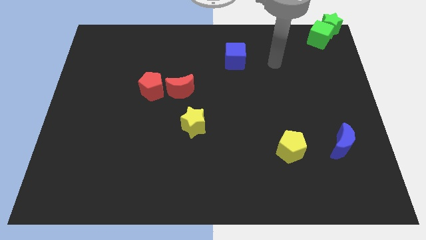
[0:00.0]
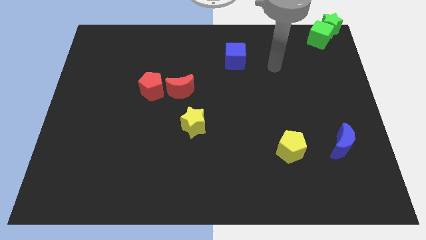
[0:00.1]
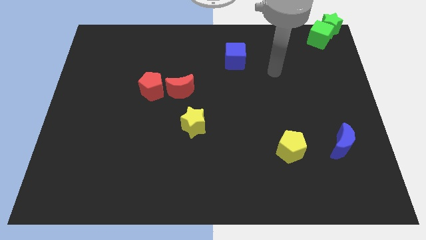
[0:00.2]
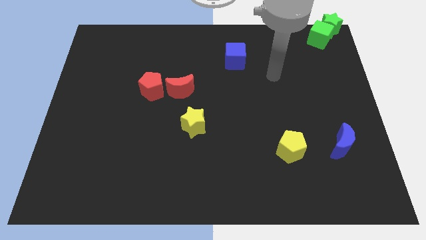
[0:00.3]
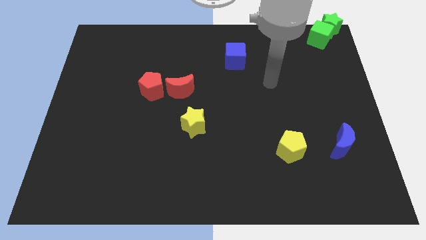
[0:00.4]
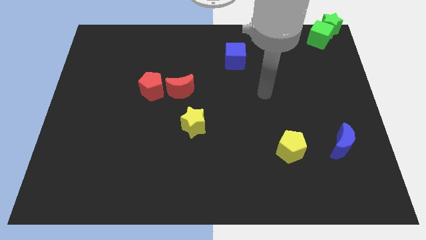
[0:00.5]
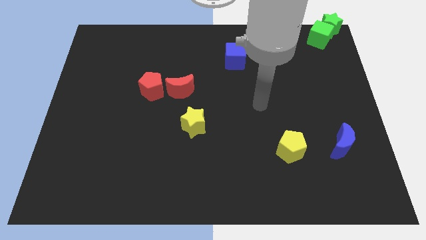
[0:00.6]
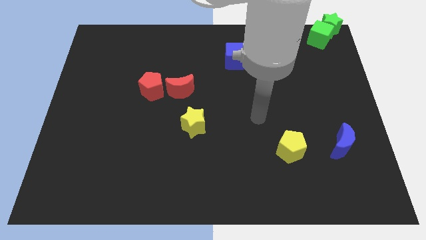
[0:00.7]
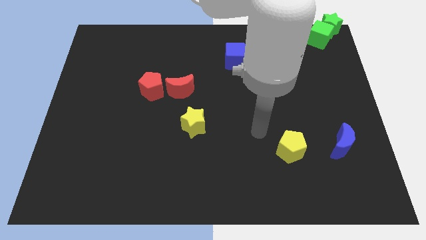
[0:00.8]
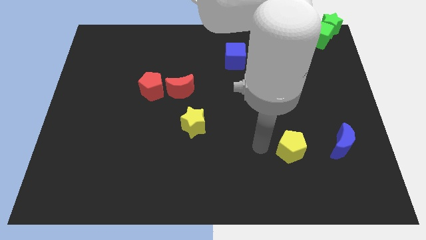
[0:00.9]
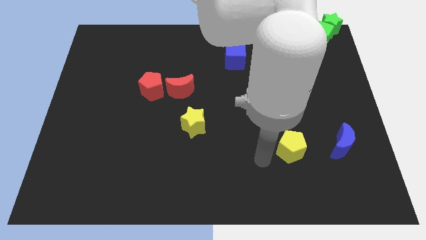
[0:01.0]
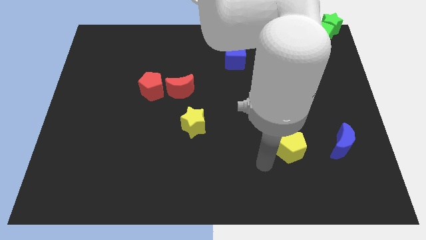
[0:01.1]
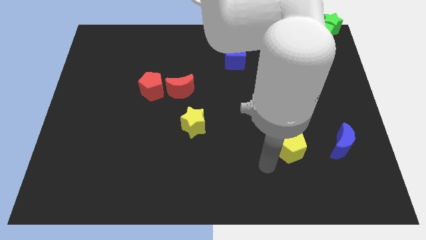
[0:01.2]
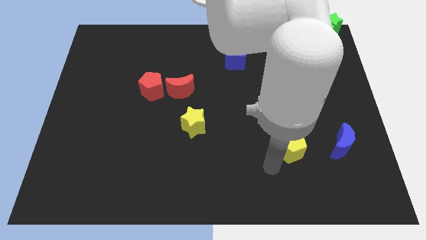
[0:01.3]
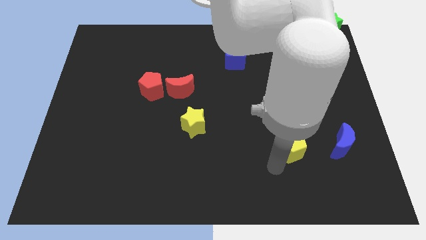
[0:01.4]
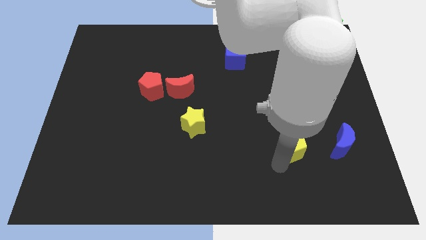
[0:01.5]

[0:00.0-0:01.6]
place your arm to the bottom left side of the yellow pentagon

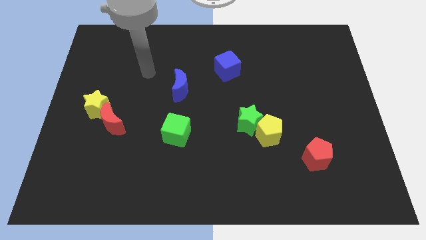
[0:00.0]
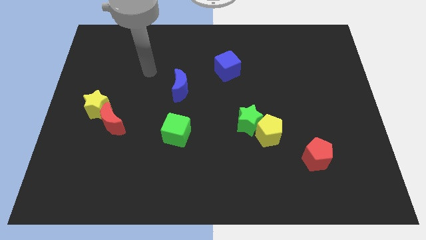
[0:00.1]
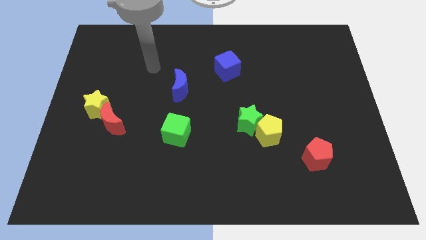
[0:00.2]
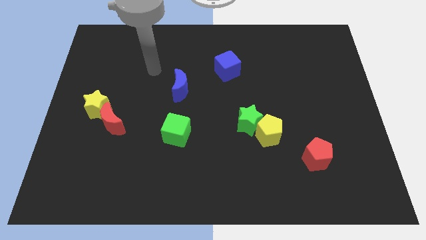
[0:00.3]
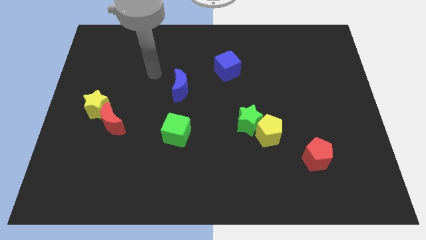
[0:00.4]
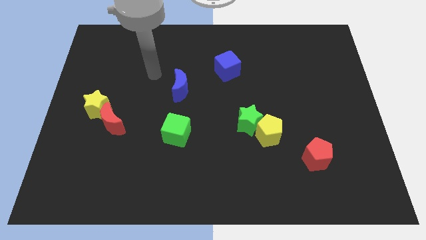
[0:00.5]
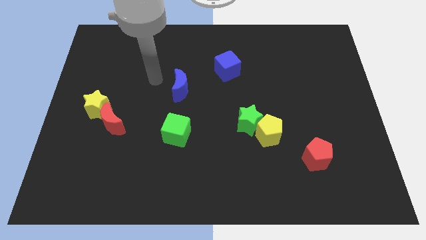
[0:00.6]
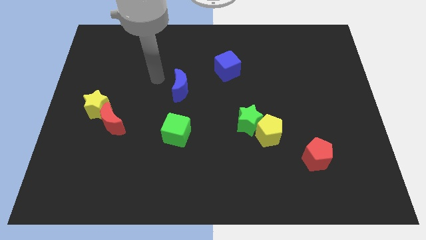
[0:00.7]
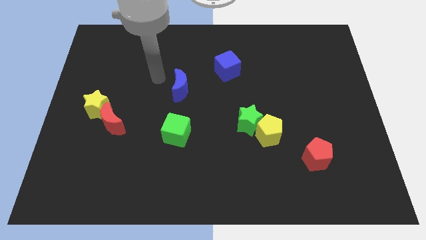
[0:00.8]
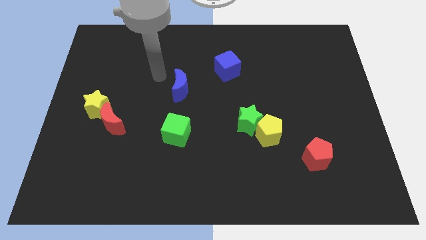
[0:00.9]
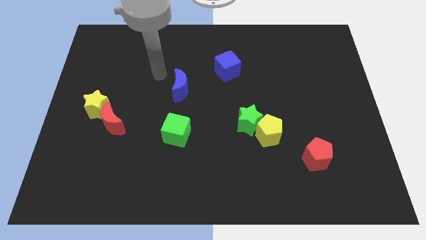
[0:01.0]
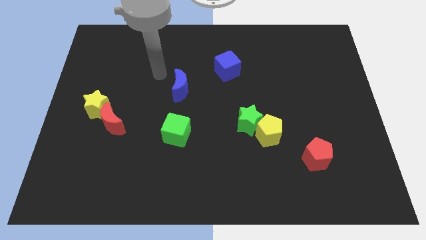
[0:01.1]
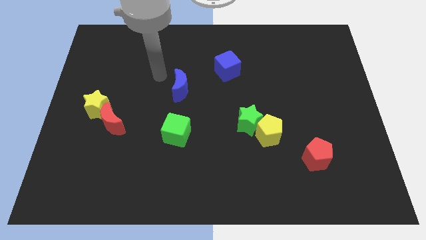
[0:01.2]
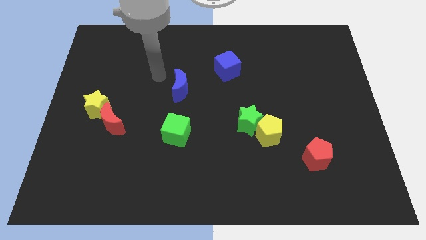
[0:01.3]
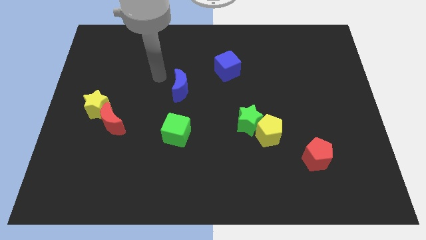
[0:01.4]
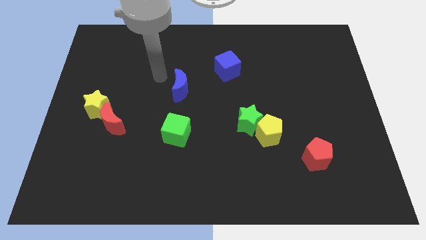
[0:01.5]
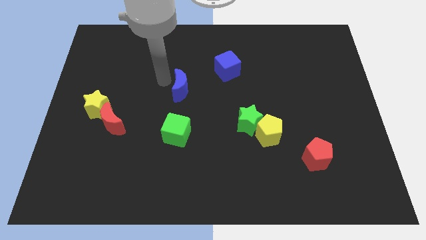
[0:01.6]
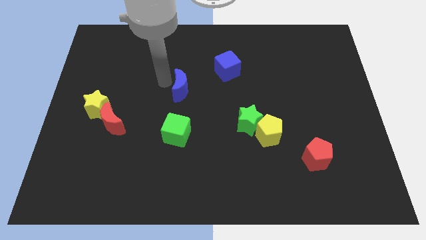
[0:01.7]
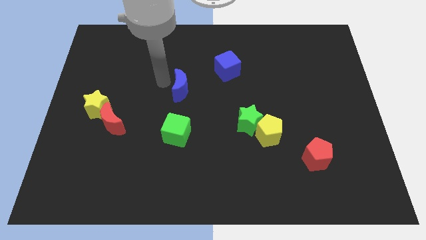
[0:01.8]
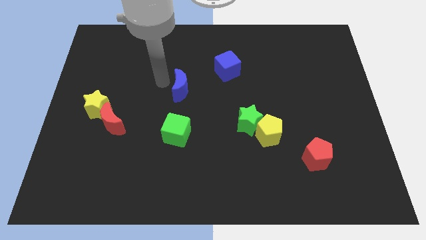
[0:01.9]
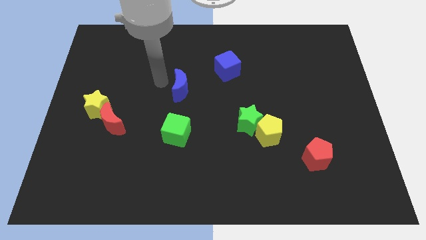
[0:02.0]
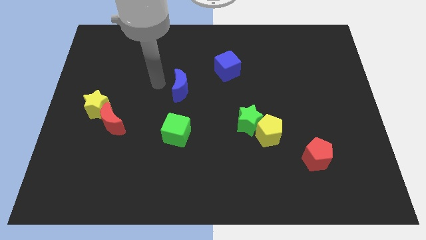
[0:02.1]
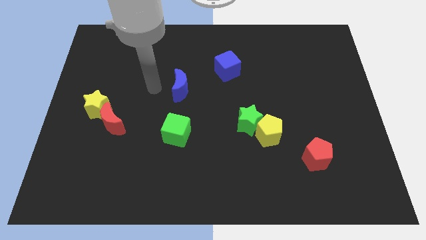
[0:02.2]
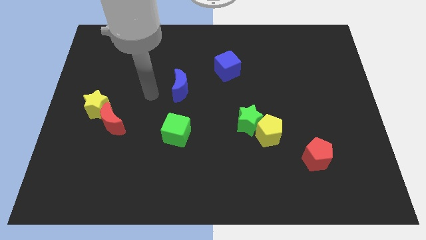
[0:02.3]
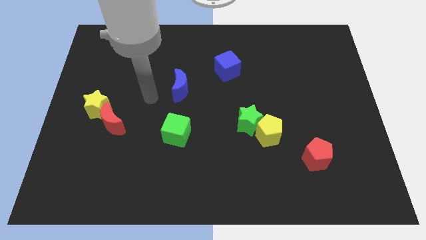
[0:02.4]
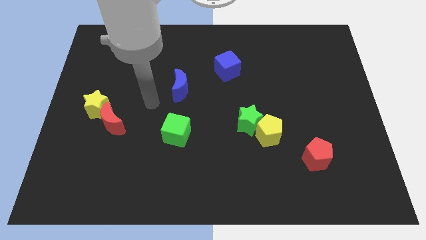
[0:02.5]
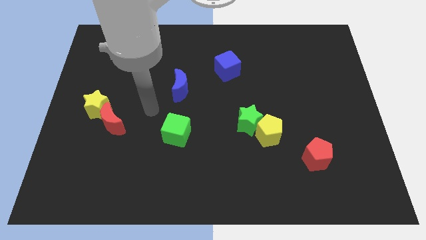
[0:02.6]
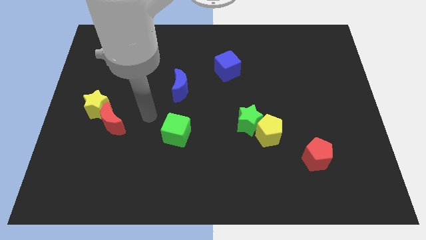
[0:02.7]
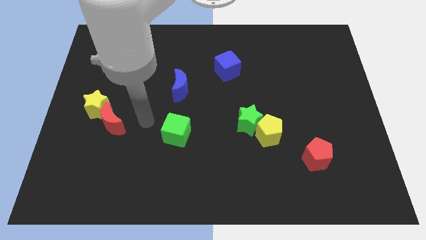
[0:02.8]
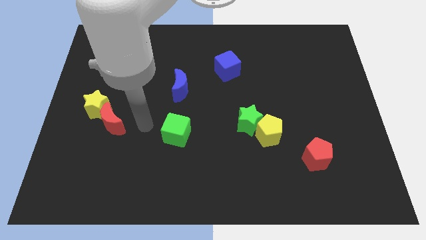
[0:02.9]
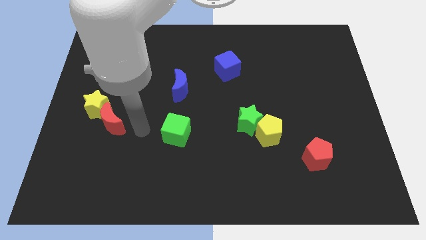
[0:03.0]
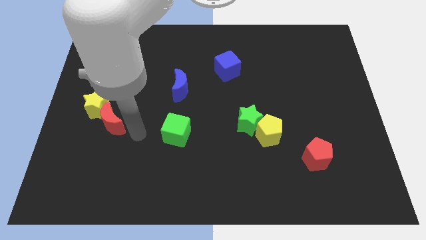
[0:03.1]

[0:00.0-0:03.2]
move your arm towards the red crescent

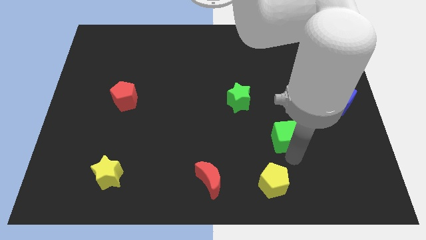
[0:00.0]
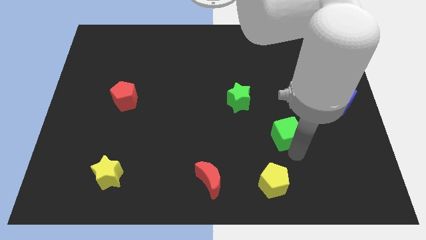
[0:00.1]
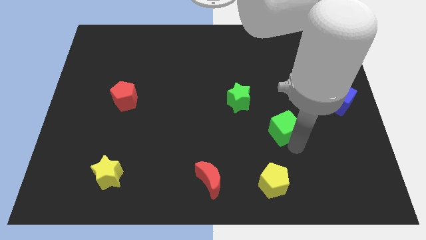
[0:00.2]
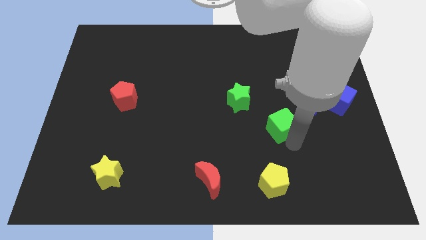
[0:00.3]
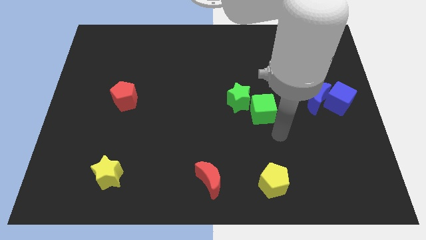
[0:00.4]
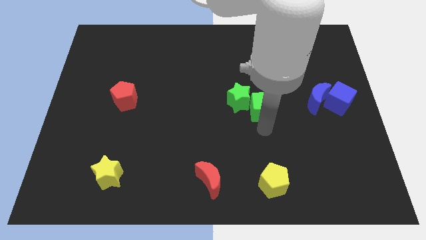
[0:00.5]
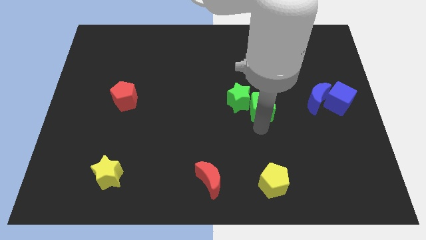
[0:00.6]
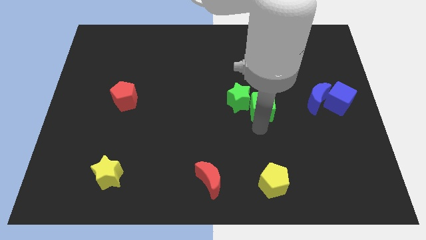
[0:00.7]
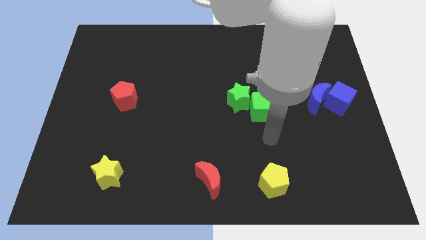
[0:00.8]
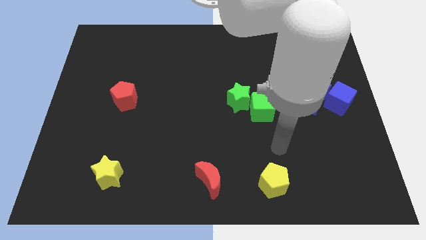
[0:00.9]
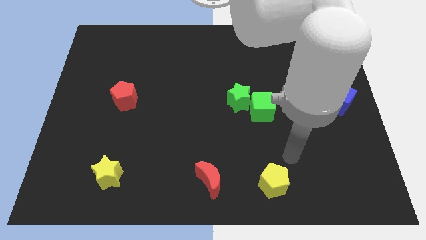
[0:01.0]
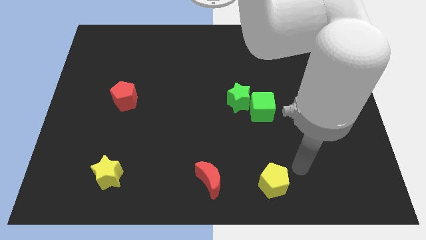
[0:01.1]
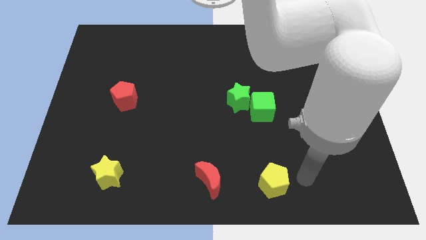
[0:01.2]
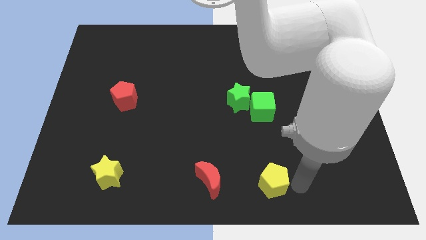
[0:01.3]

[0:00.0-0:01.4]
move green cube close to the green star

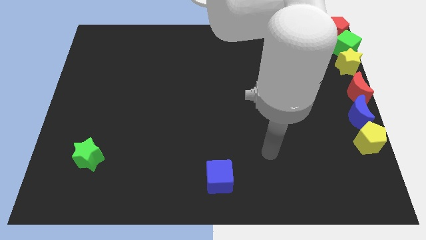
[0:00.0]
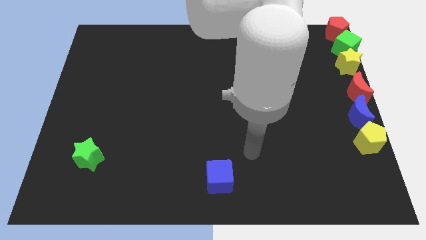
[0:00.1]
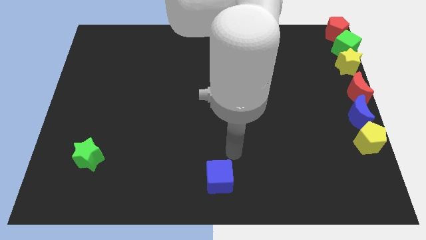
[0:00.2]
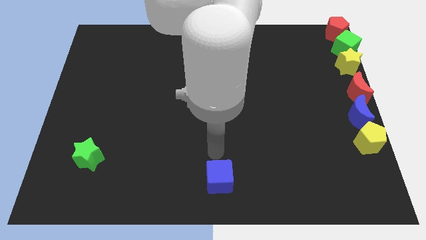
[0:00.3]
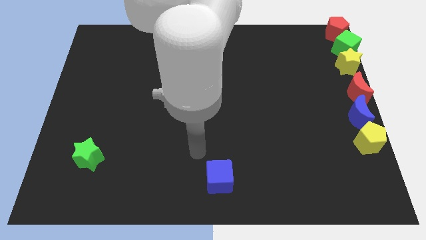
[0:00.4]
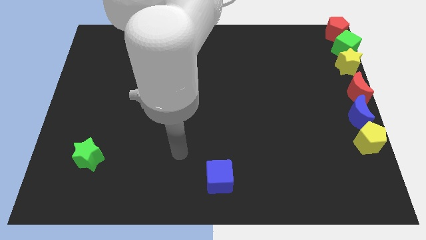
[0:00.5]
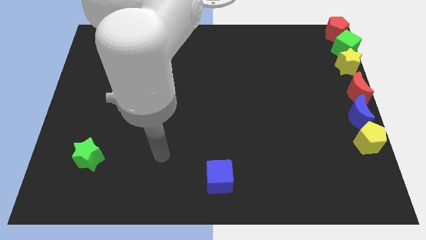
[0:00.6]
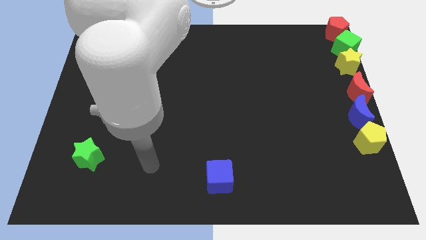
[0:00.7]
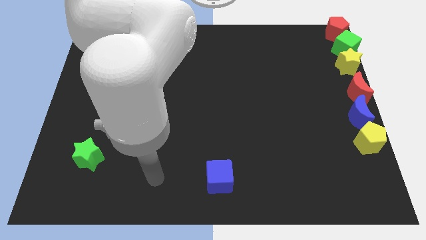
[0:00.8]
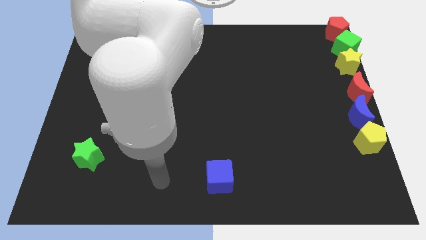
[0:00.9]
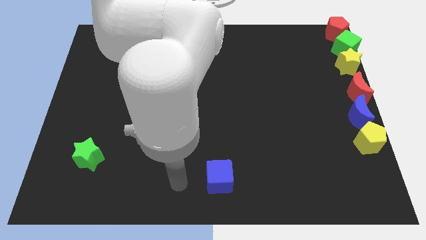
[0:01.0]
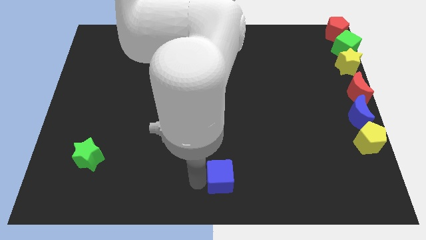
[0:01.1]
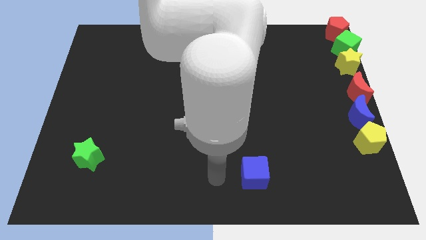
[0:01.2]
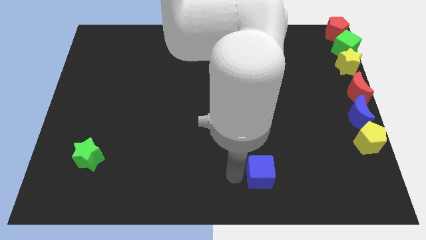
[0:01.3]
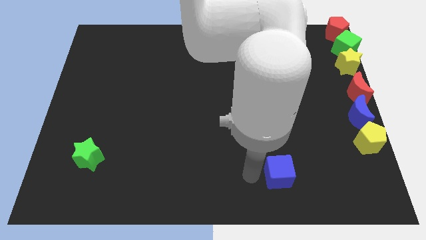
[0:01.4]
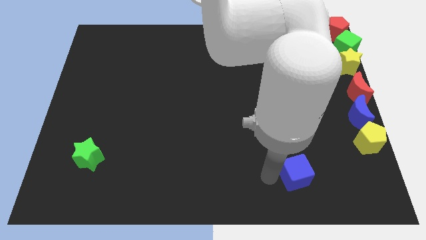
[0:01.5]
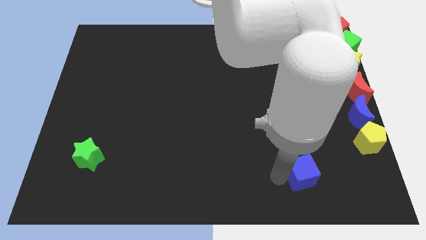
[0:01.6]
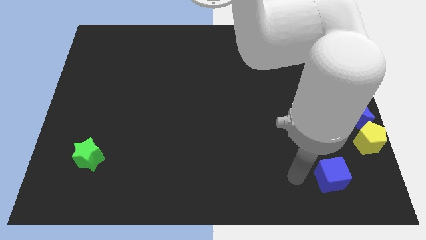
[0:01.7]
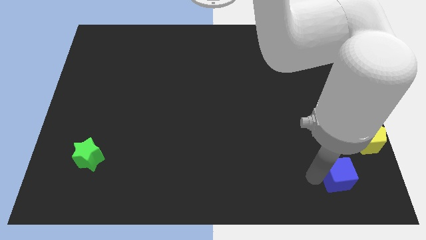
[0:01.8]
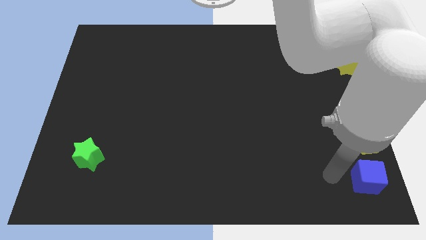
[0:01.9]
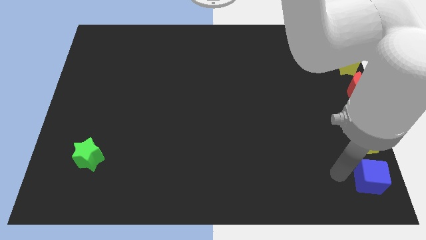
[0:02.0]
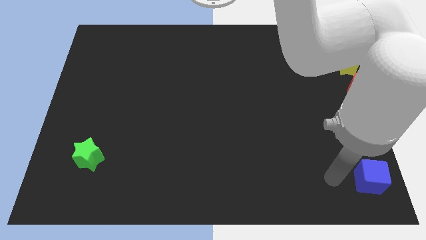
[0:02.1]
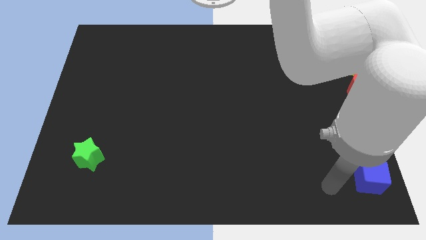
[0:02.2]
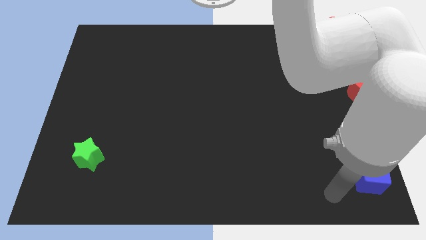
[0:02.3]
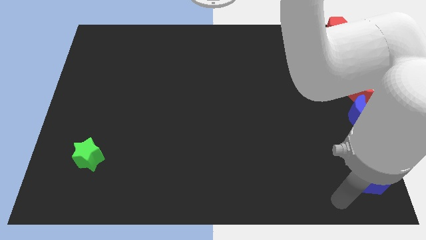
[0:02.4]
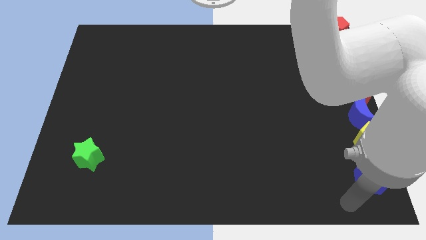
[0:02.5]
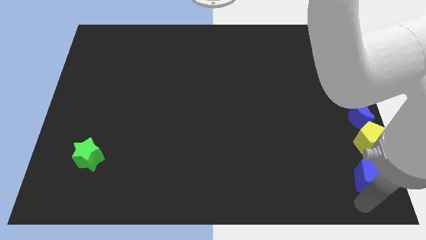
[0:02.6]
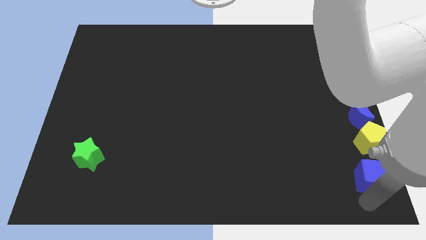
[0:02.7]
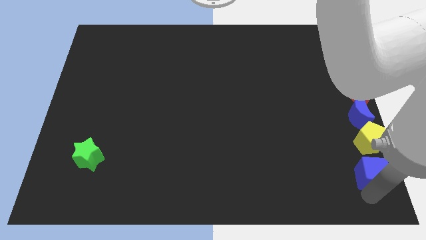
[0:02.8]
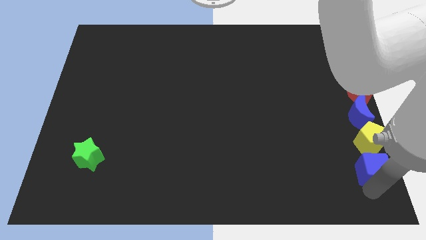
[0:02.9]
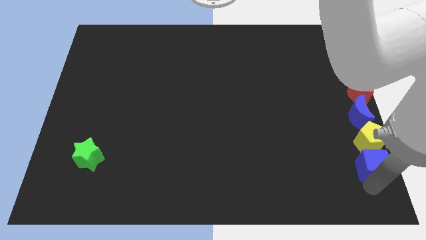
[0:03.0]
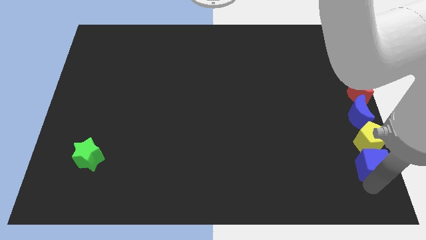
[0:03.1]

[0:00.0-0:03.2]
place blue cube below yellow pentagon
